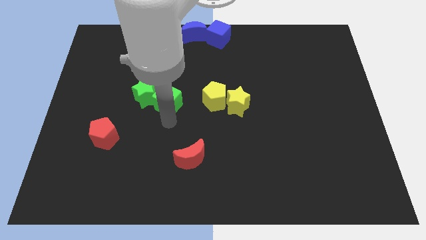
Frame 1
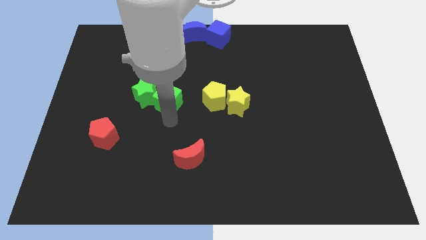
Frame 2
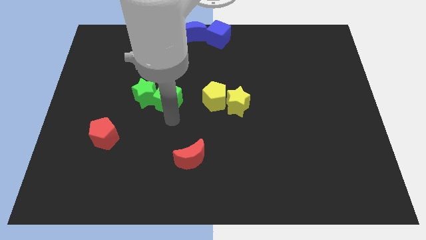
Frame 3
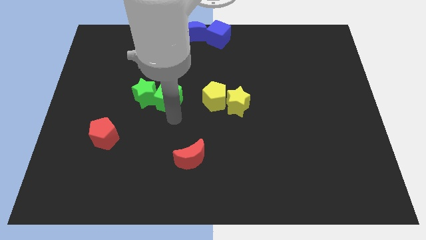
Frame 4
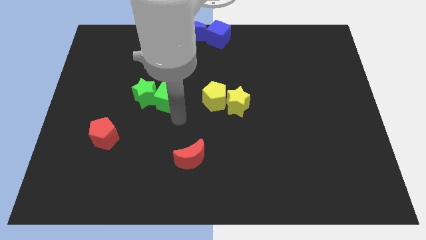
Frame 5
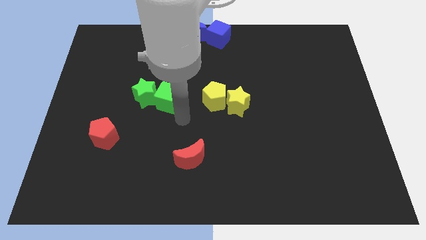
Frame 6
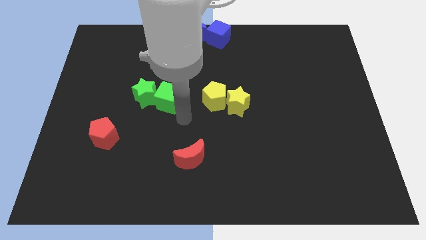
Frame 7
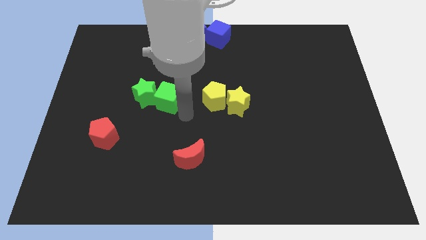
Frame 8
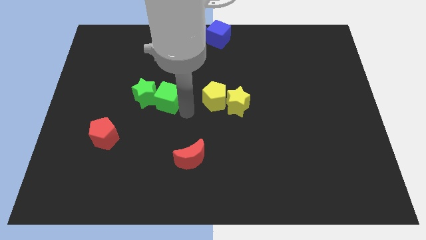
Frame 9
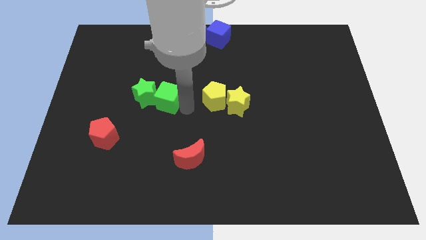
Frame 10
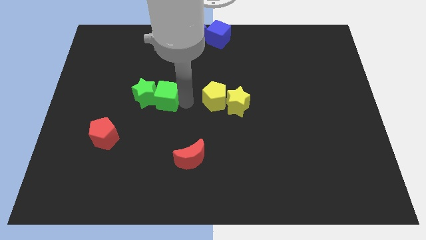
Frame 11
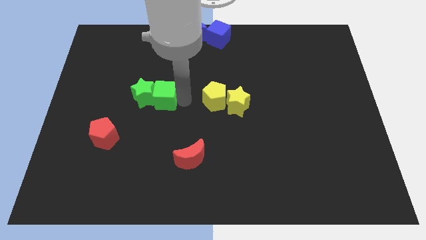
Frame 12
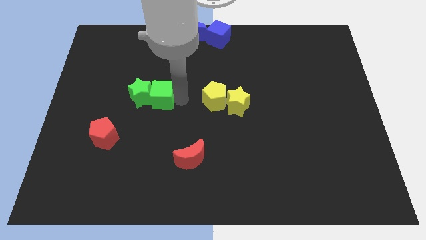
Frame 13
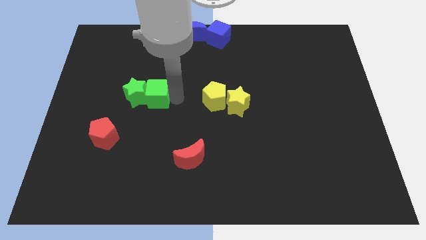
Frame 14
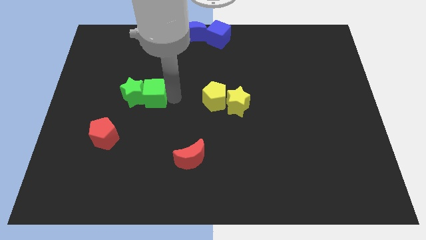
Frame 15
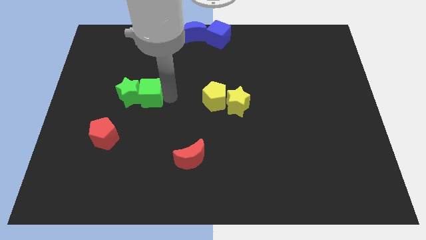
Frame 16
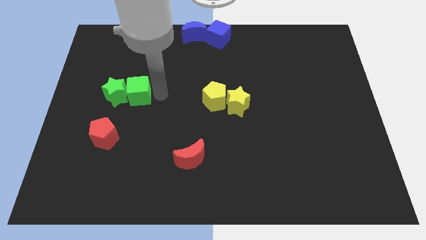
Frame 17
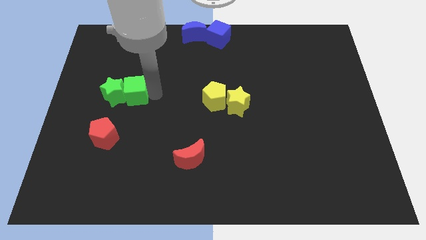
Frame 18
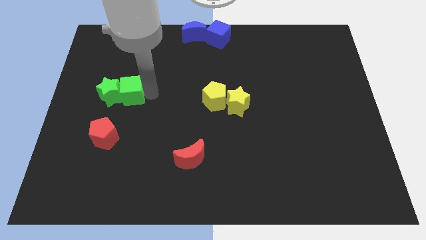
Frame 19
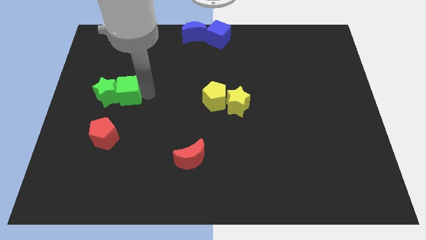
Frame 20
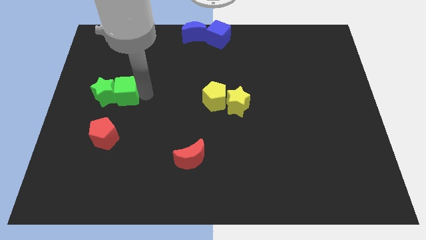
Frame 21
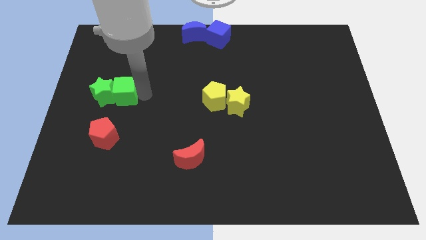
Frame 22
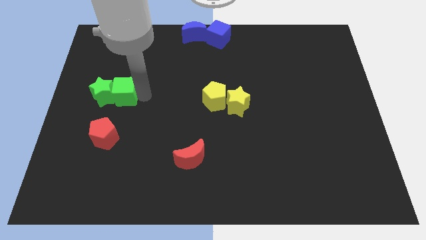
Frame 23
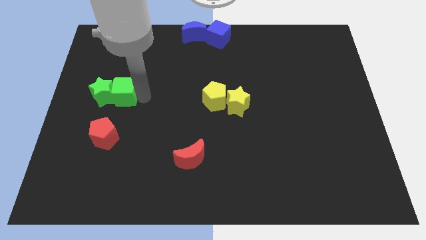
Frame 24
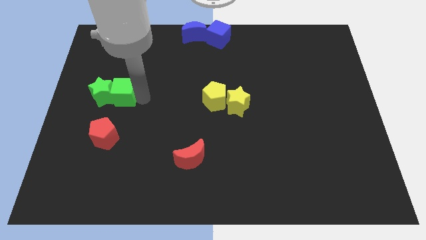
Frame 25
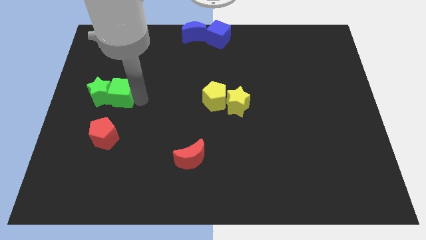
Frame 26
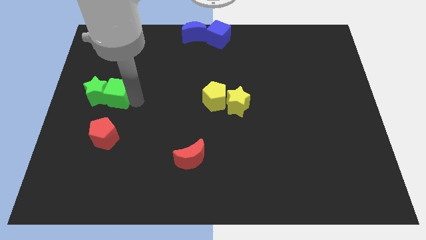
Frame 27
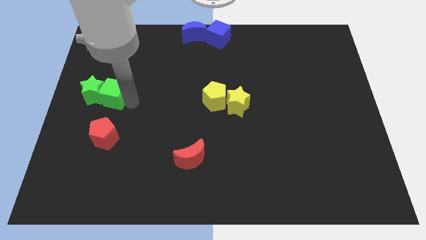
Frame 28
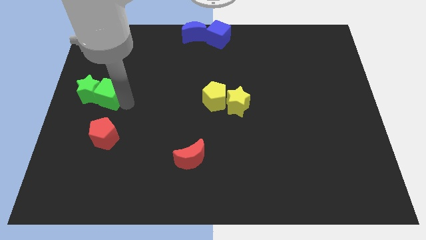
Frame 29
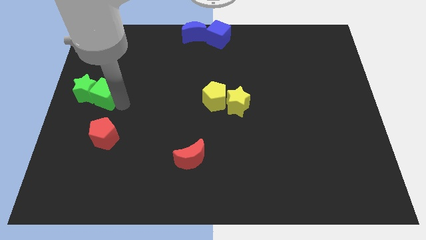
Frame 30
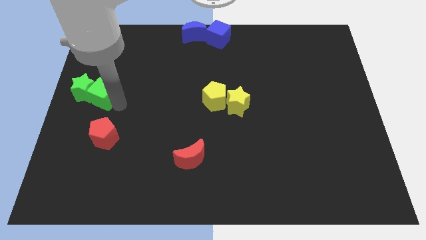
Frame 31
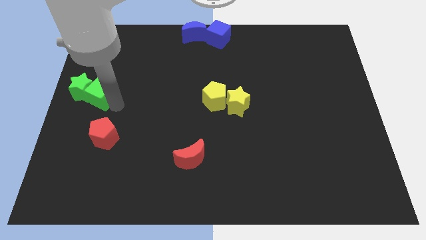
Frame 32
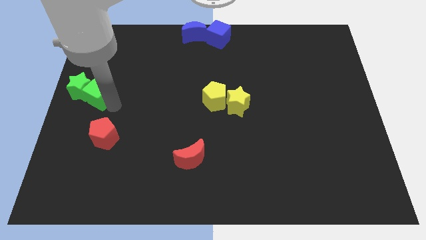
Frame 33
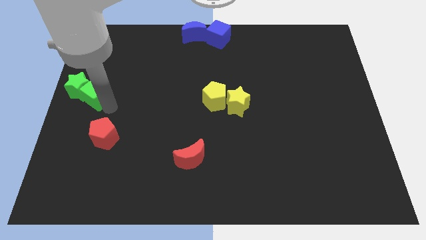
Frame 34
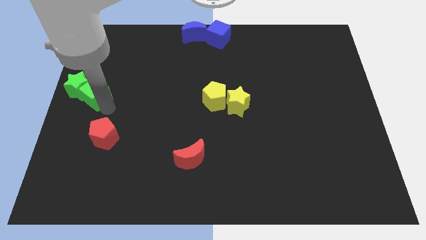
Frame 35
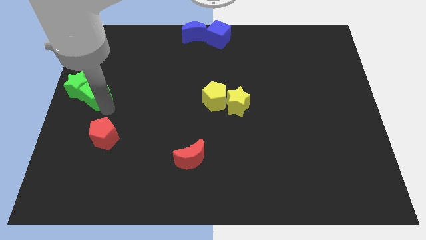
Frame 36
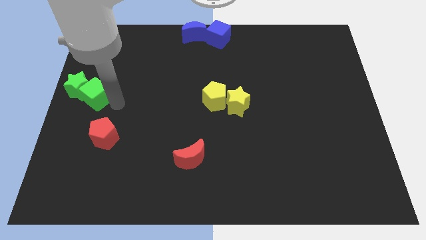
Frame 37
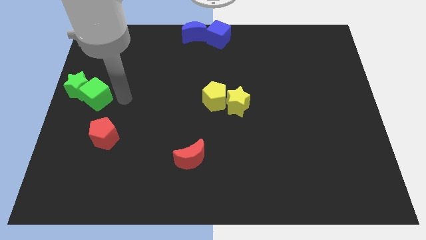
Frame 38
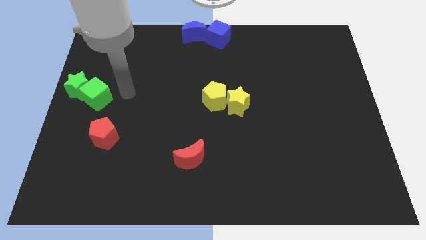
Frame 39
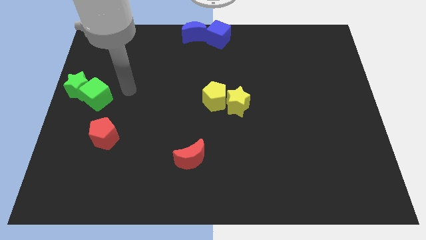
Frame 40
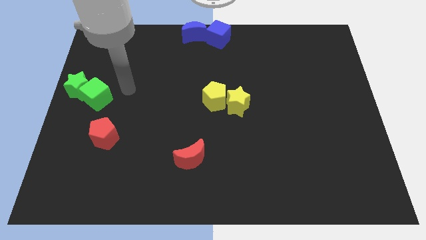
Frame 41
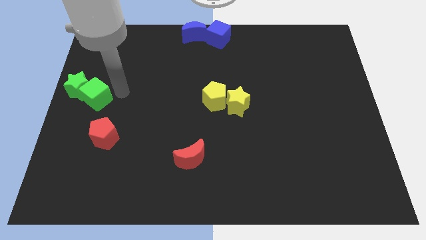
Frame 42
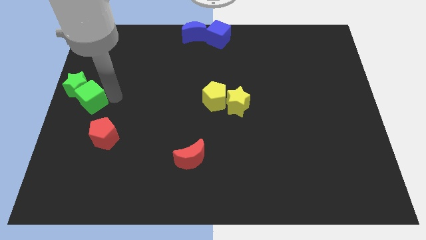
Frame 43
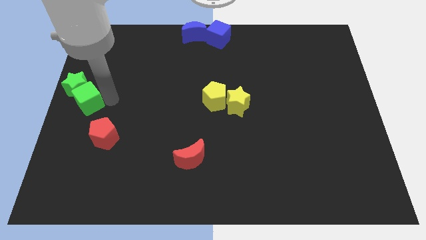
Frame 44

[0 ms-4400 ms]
push the green star to the center left with the green cube

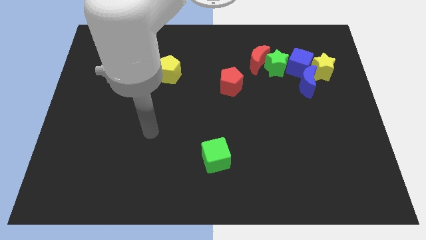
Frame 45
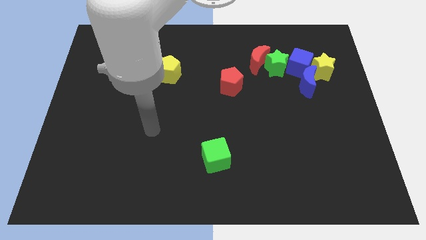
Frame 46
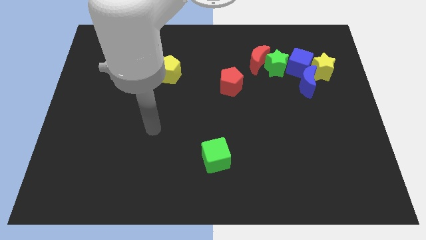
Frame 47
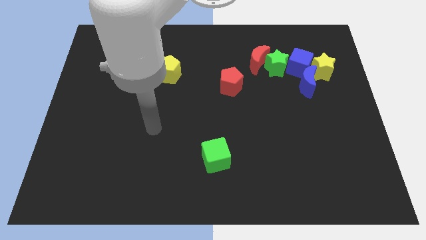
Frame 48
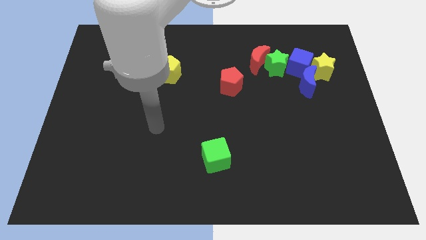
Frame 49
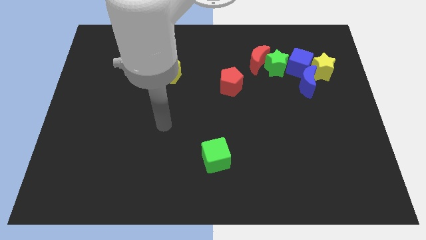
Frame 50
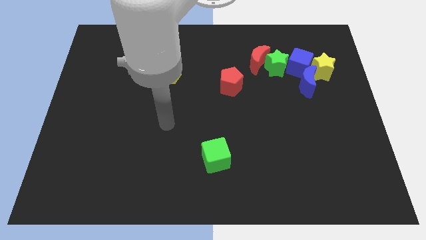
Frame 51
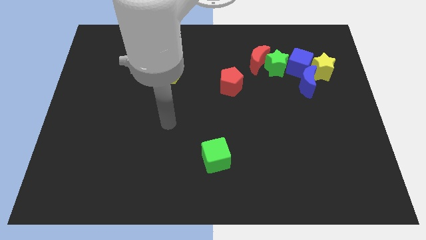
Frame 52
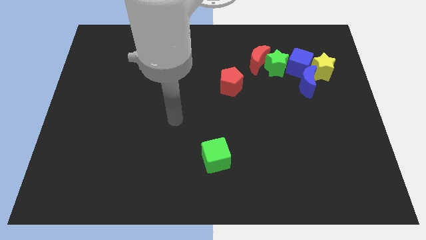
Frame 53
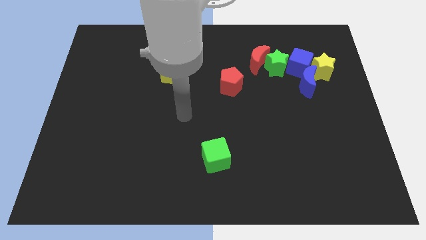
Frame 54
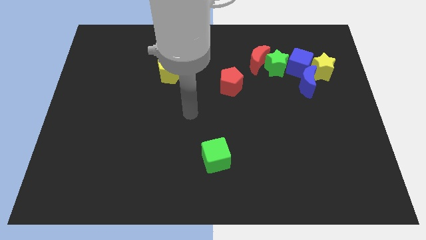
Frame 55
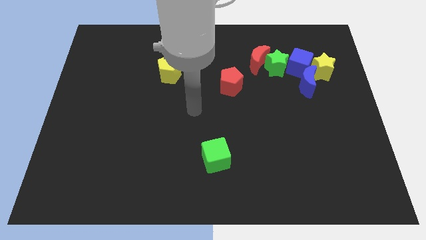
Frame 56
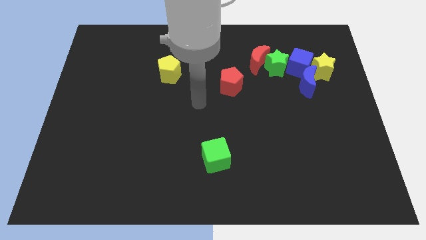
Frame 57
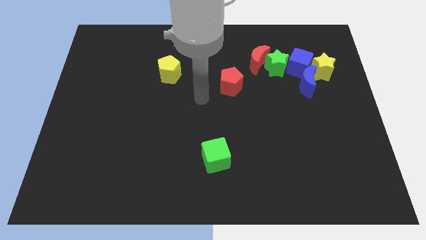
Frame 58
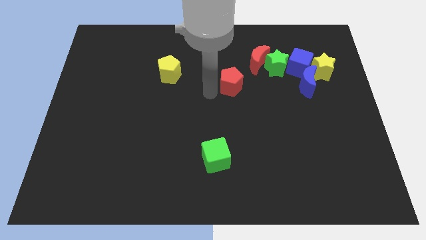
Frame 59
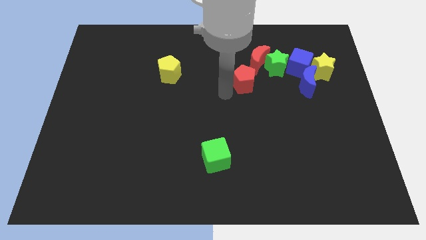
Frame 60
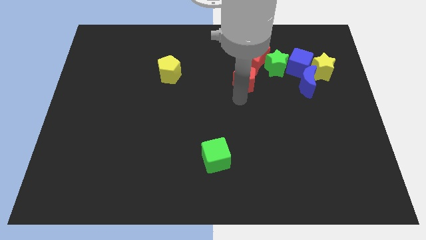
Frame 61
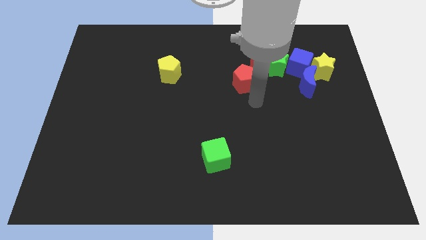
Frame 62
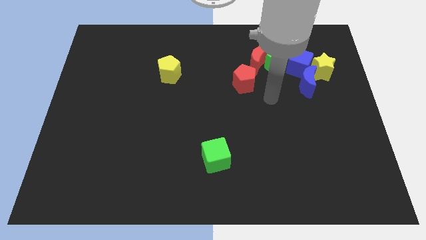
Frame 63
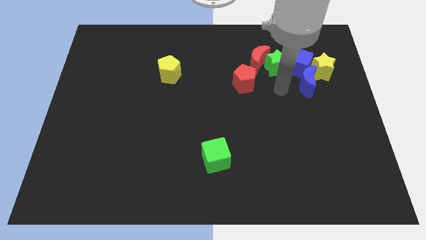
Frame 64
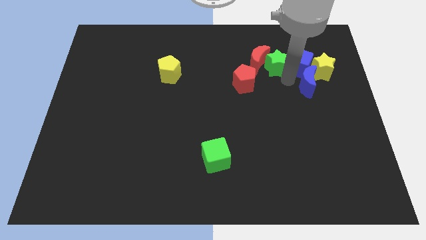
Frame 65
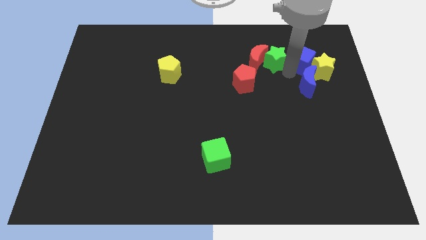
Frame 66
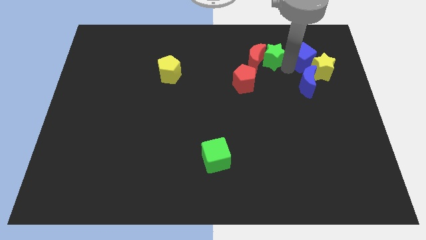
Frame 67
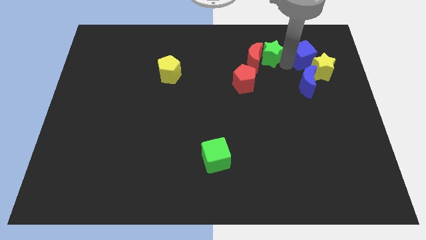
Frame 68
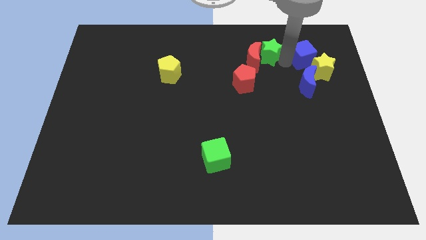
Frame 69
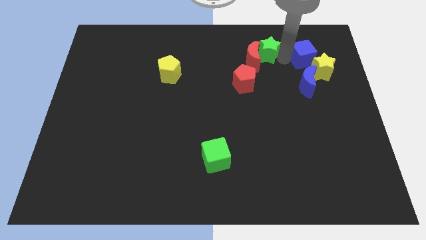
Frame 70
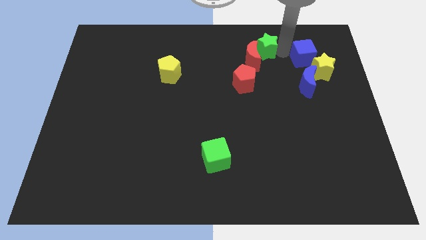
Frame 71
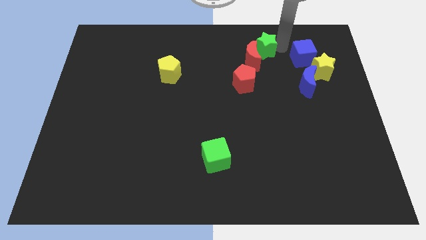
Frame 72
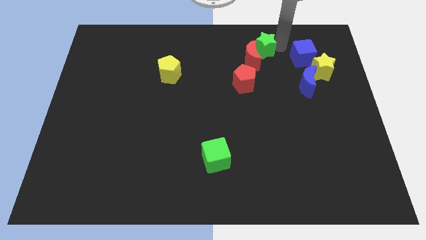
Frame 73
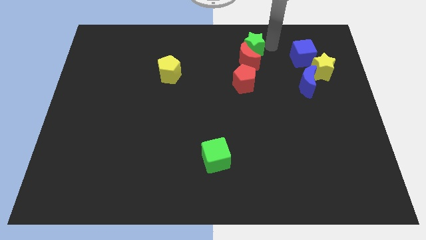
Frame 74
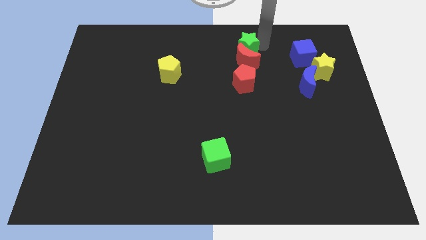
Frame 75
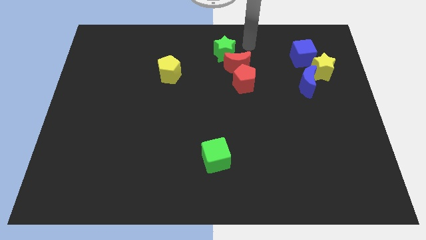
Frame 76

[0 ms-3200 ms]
push green star above red crescent

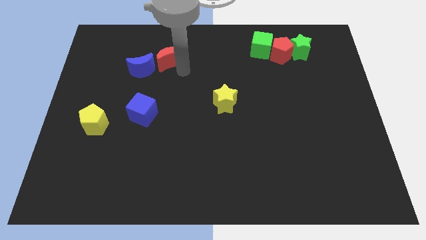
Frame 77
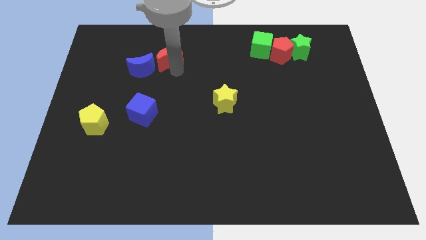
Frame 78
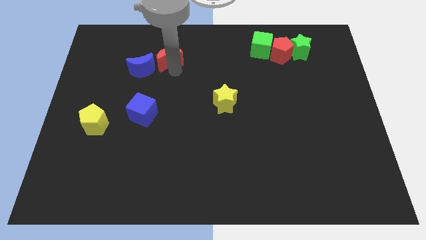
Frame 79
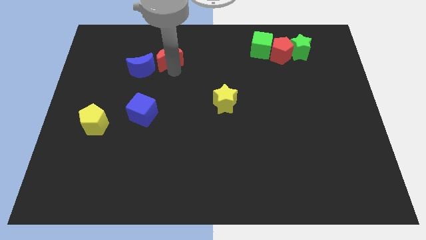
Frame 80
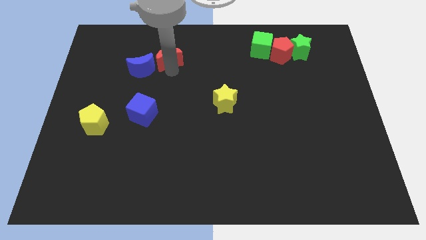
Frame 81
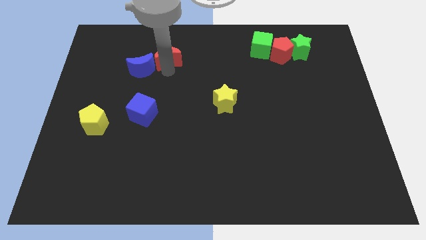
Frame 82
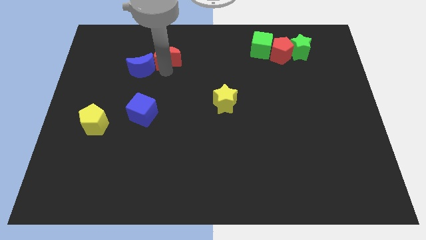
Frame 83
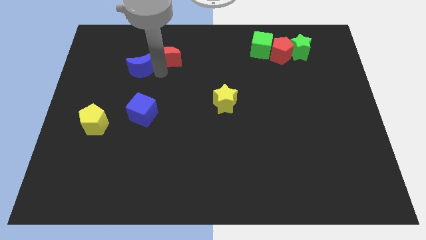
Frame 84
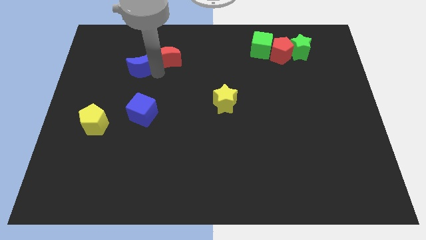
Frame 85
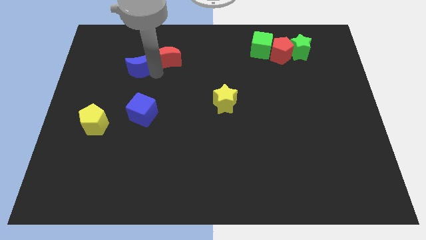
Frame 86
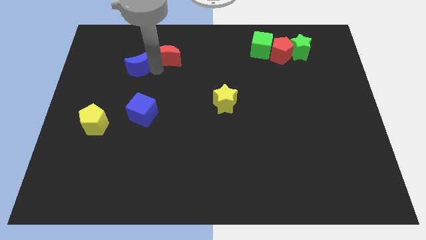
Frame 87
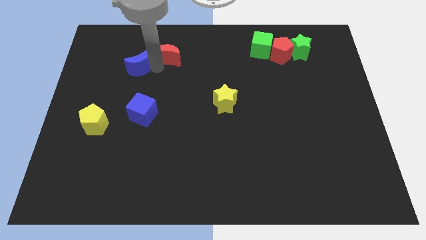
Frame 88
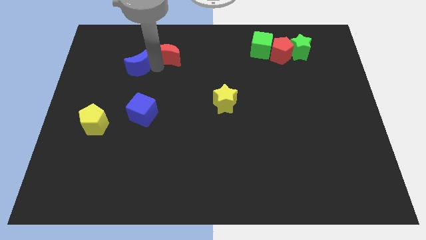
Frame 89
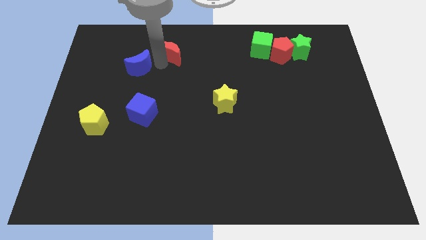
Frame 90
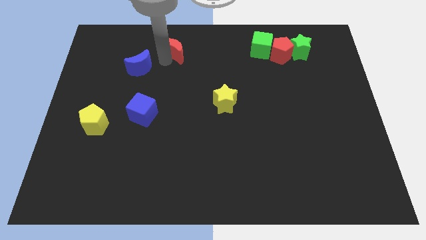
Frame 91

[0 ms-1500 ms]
push the red crescent slightly to the top
